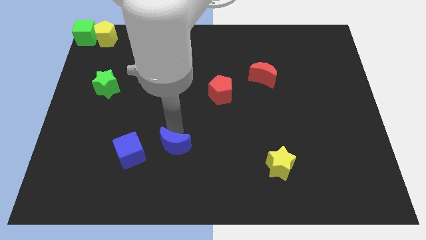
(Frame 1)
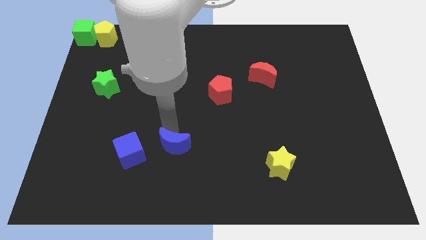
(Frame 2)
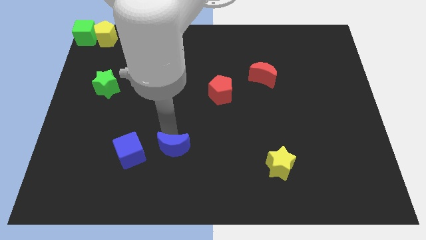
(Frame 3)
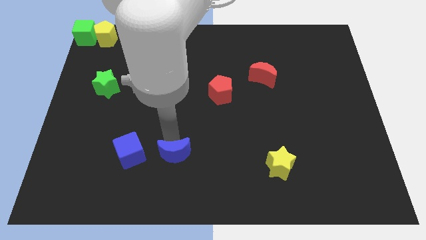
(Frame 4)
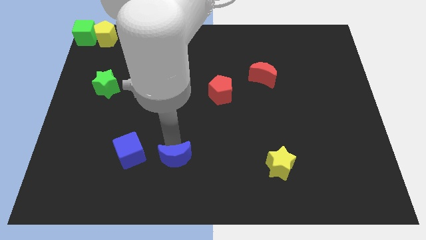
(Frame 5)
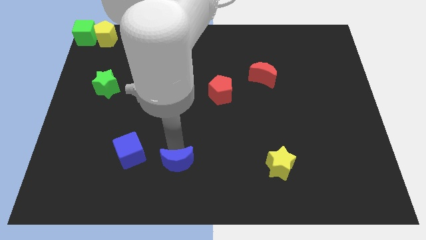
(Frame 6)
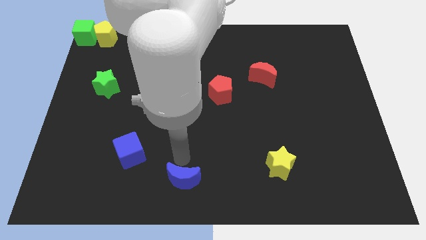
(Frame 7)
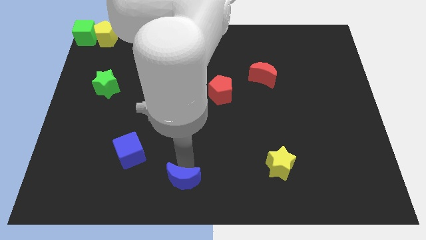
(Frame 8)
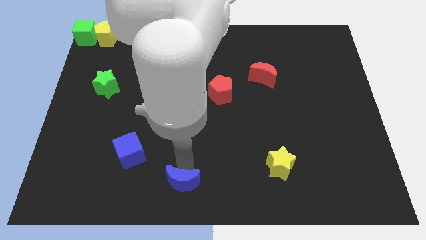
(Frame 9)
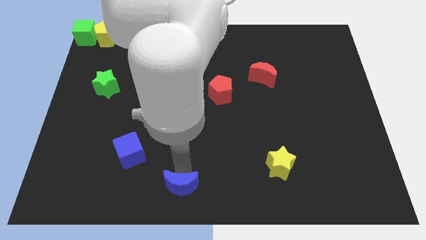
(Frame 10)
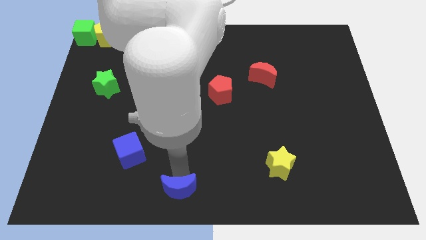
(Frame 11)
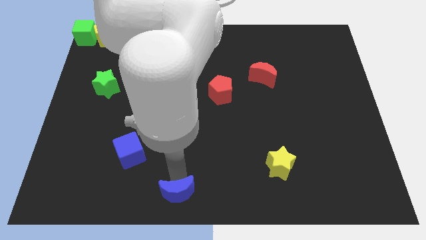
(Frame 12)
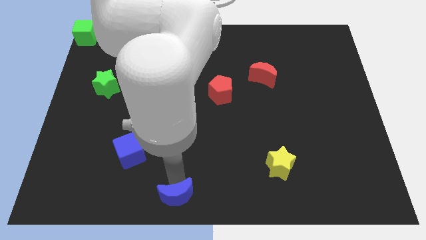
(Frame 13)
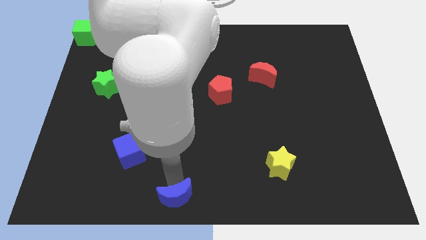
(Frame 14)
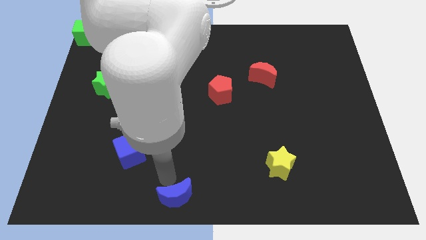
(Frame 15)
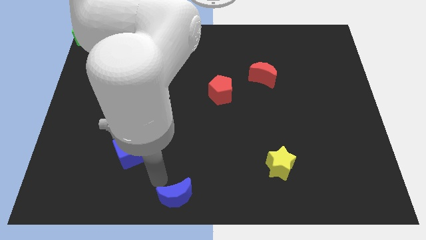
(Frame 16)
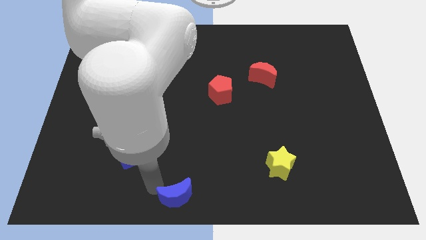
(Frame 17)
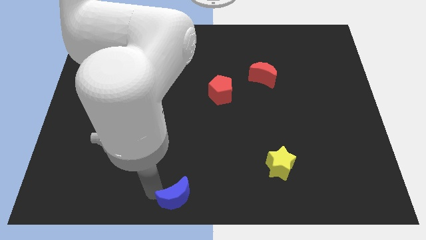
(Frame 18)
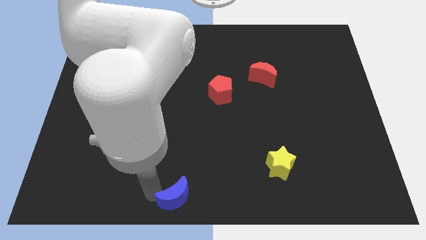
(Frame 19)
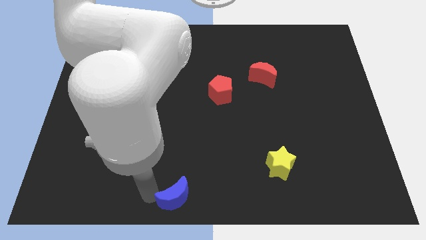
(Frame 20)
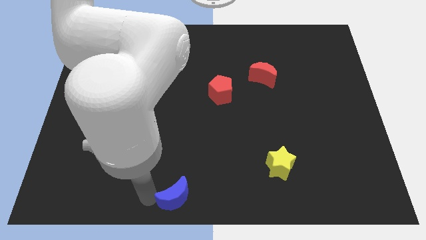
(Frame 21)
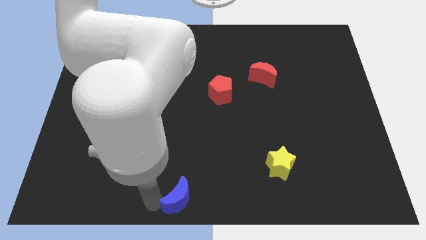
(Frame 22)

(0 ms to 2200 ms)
move the blue crescent to center bottom of the board

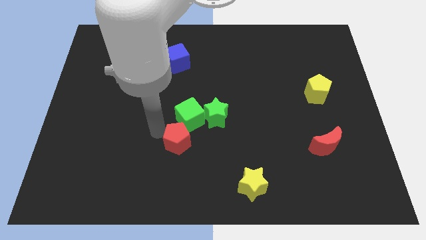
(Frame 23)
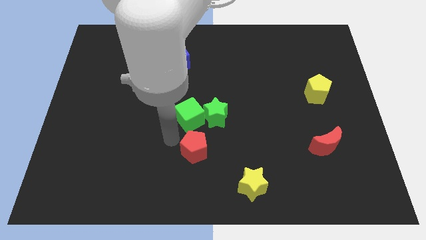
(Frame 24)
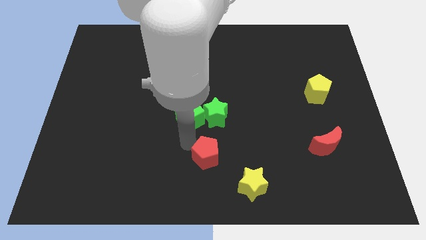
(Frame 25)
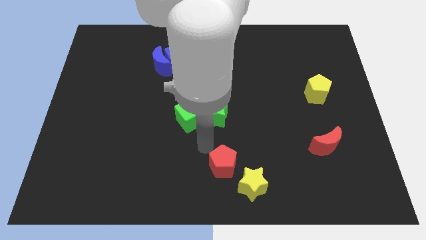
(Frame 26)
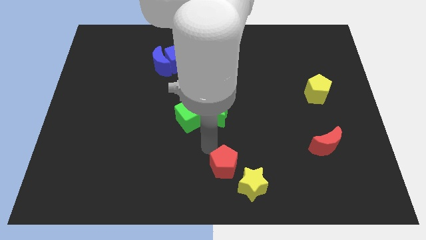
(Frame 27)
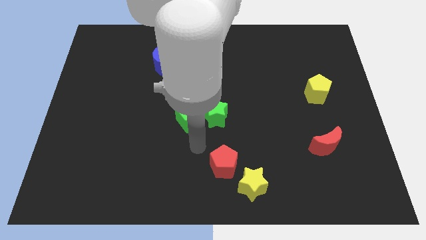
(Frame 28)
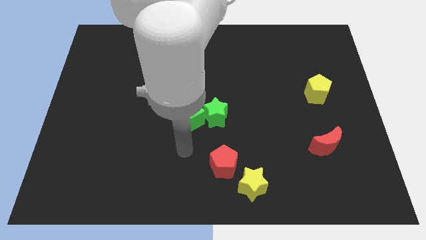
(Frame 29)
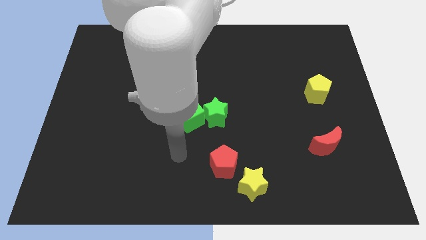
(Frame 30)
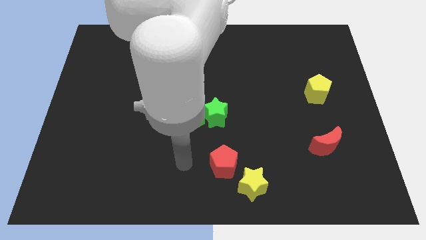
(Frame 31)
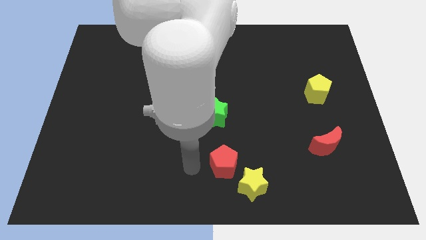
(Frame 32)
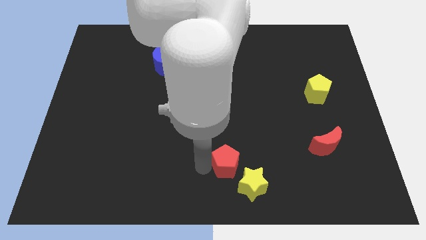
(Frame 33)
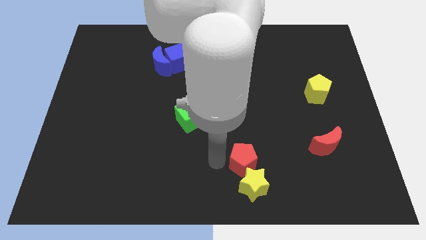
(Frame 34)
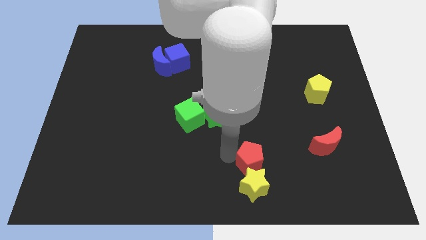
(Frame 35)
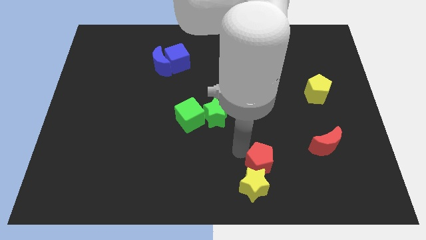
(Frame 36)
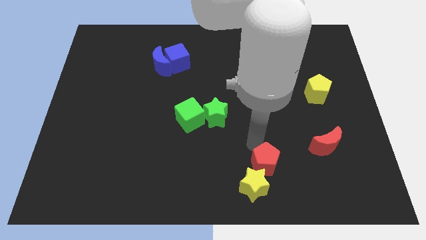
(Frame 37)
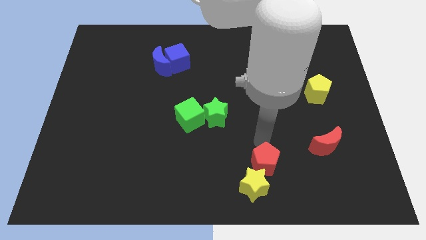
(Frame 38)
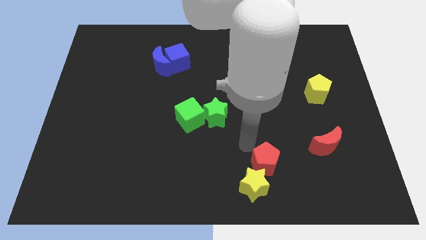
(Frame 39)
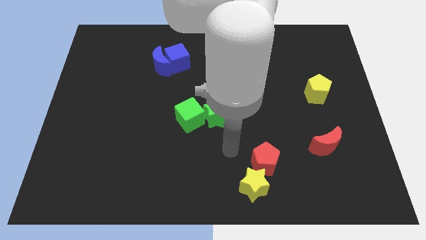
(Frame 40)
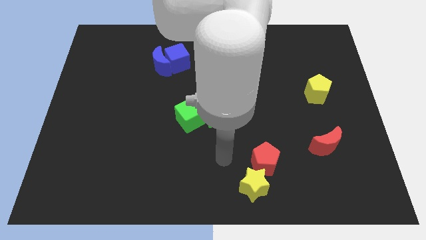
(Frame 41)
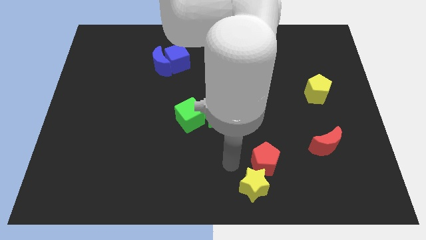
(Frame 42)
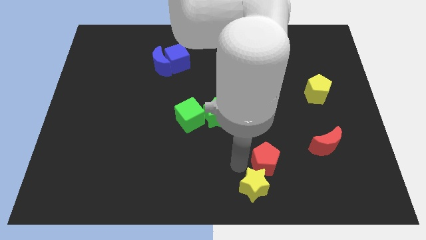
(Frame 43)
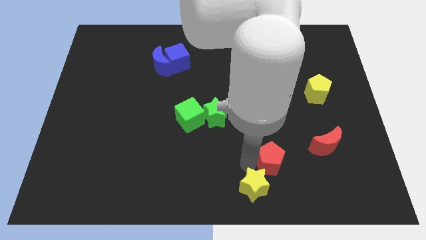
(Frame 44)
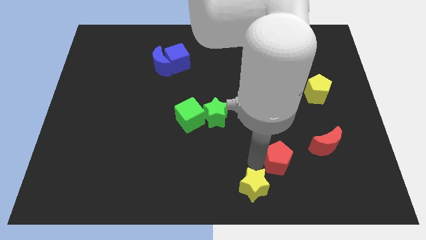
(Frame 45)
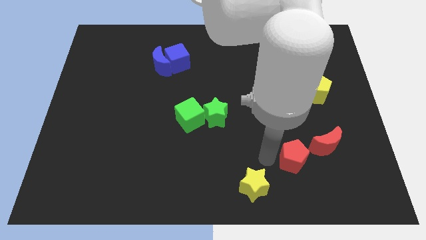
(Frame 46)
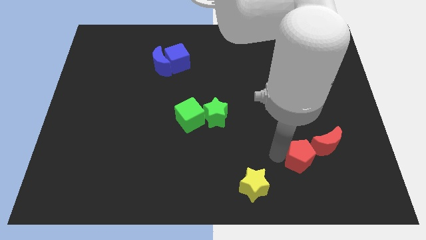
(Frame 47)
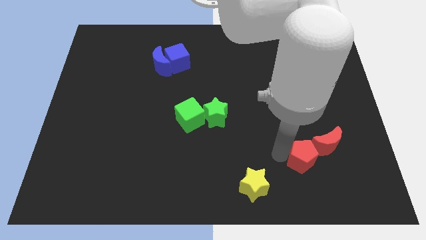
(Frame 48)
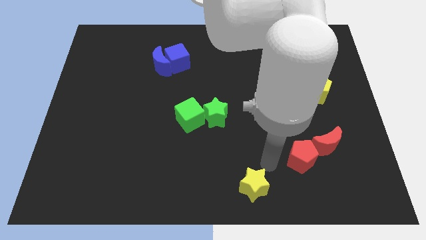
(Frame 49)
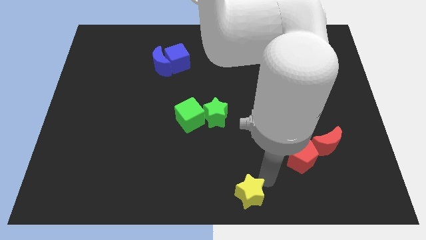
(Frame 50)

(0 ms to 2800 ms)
push the red pentagon towards the red moon

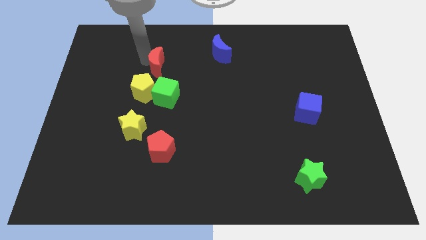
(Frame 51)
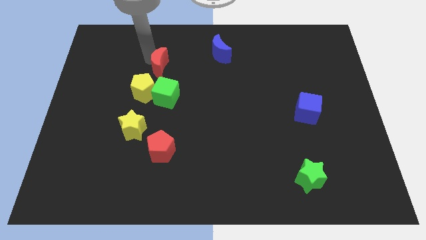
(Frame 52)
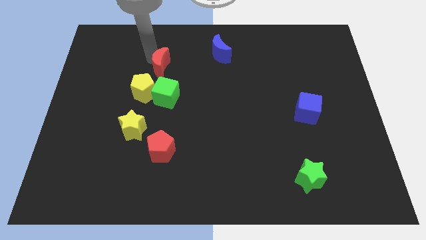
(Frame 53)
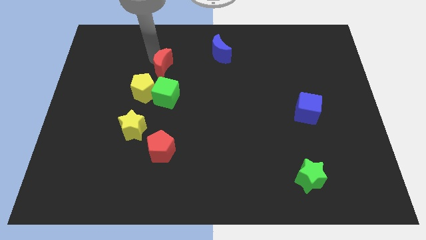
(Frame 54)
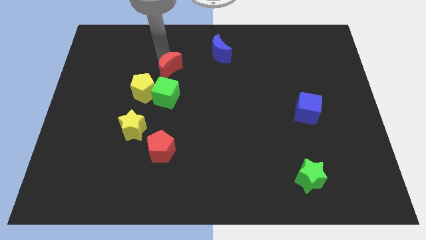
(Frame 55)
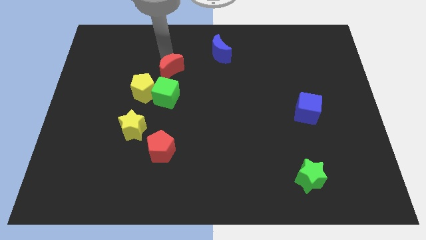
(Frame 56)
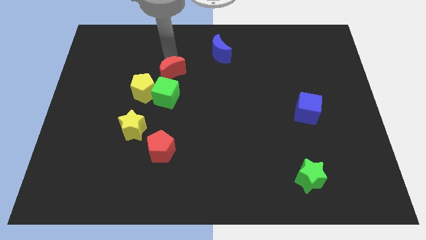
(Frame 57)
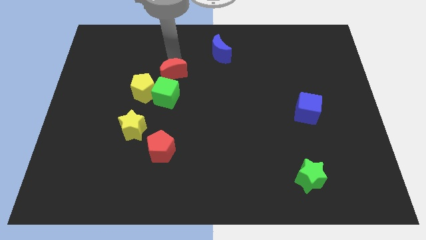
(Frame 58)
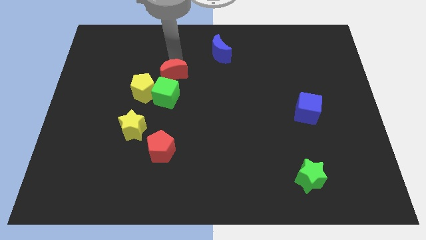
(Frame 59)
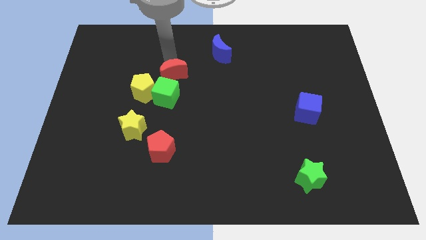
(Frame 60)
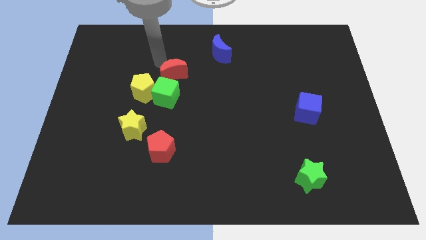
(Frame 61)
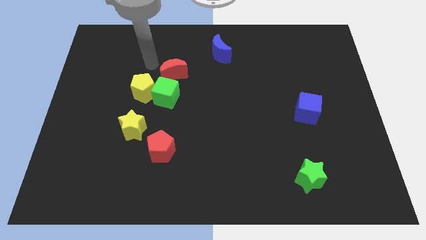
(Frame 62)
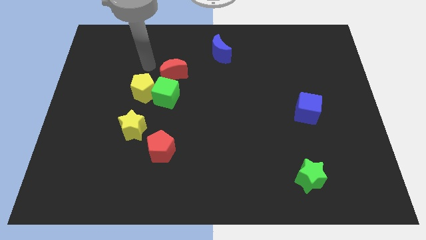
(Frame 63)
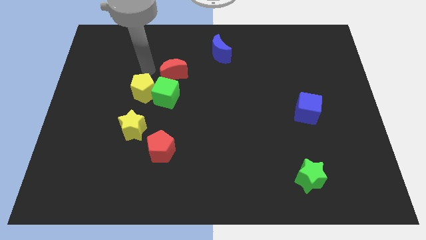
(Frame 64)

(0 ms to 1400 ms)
place the red moon above the green cube

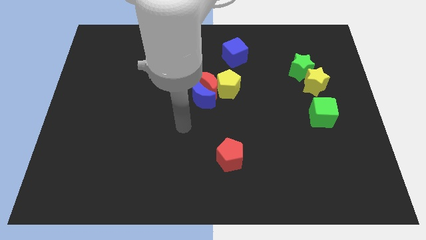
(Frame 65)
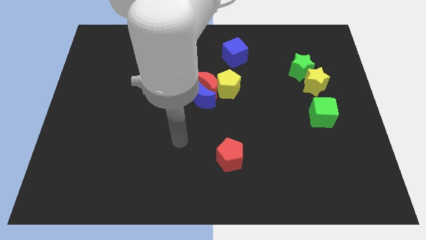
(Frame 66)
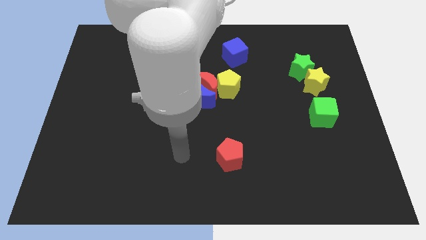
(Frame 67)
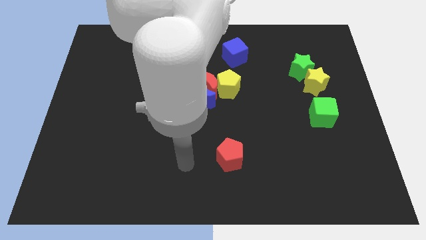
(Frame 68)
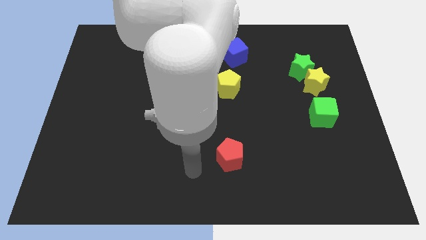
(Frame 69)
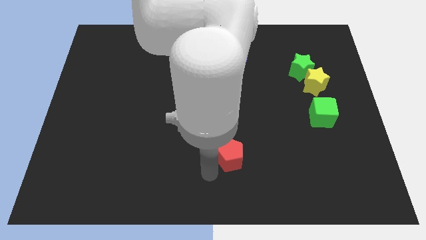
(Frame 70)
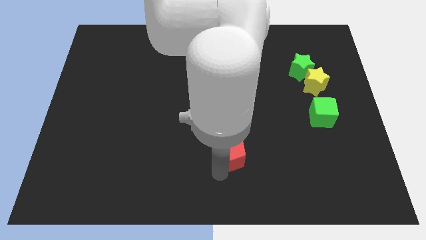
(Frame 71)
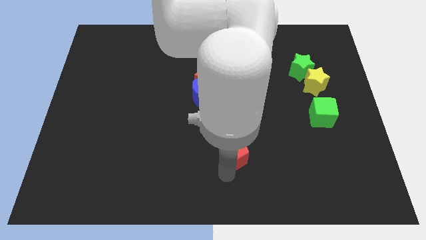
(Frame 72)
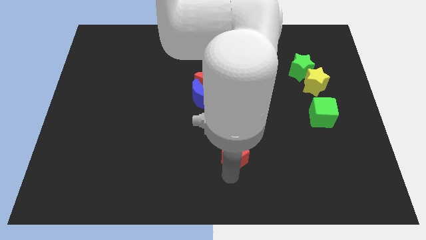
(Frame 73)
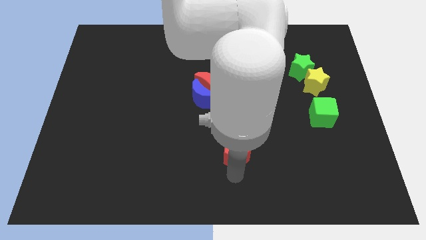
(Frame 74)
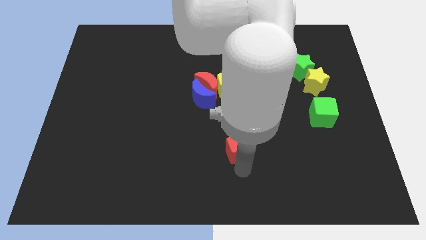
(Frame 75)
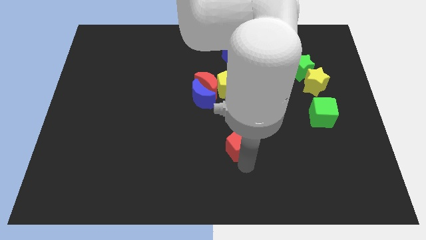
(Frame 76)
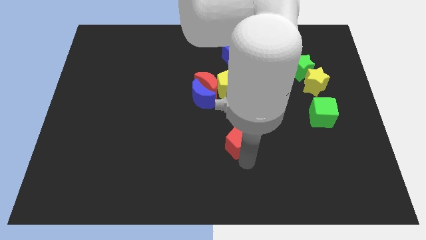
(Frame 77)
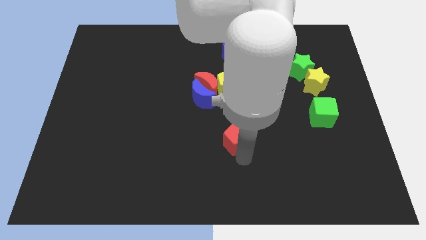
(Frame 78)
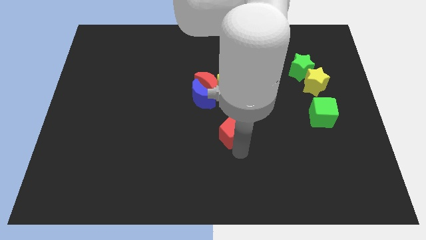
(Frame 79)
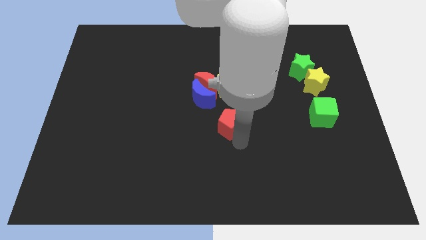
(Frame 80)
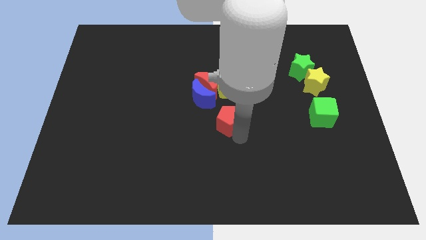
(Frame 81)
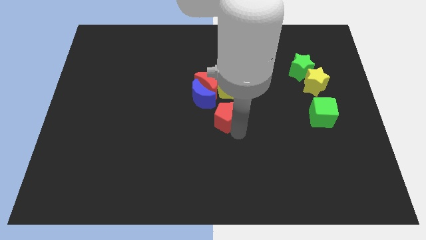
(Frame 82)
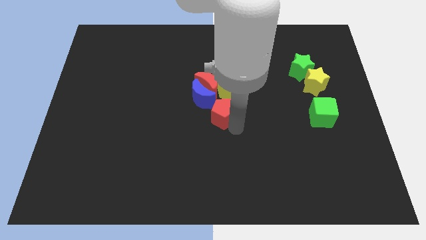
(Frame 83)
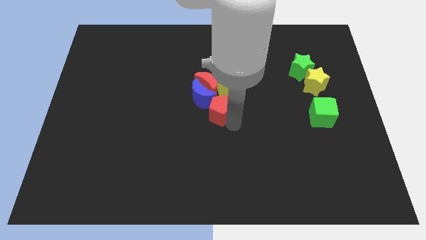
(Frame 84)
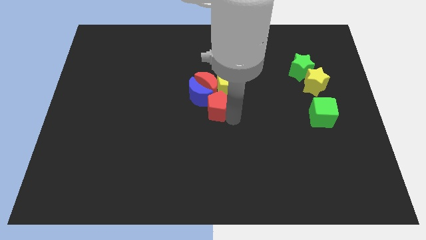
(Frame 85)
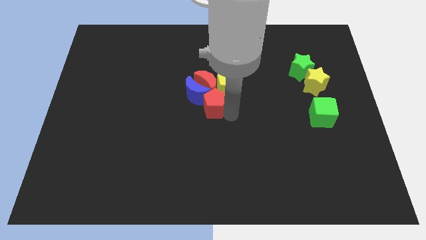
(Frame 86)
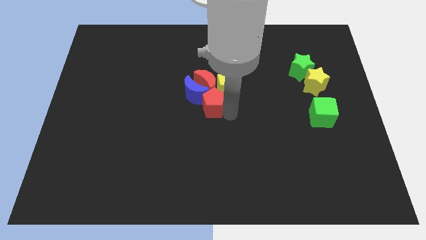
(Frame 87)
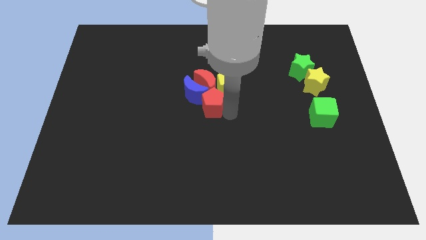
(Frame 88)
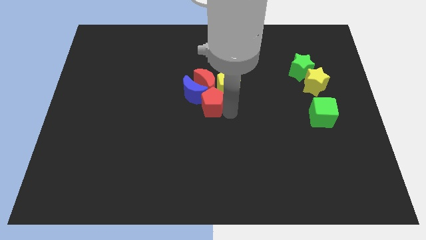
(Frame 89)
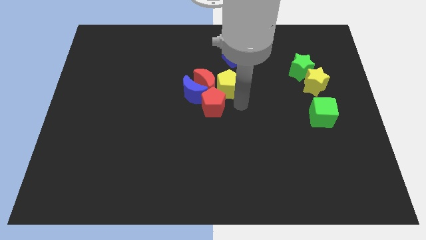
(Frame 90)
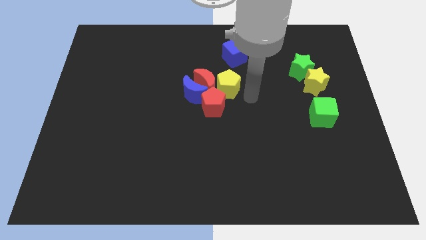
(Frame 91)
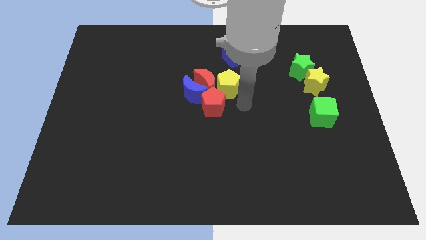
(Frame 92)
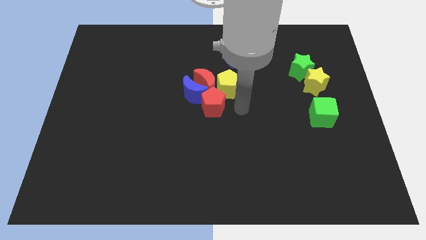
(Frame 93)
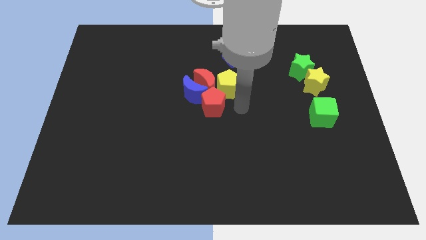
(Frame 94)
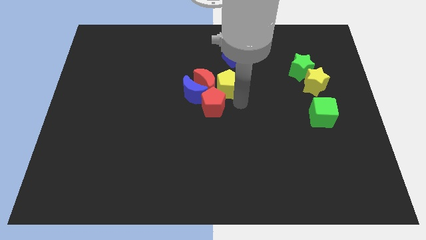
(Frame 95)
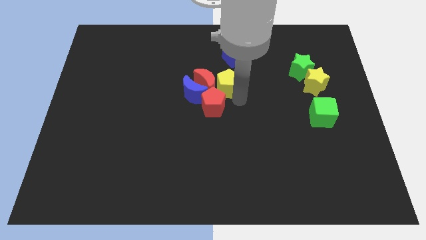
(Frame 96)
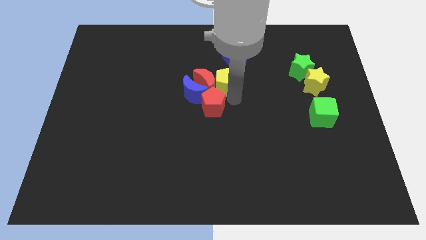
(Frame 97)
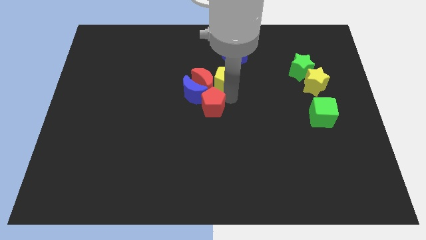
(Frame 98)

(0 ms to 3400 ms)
make a group of red pentagon red moonyellow pentagon and blue moon
